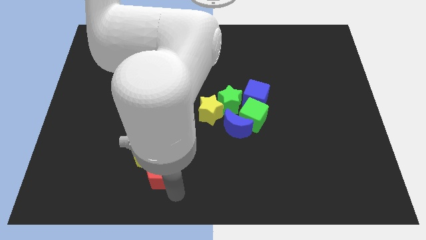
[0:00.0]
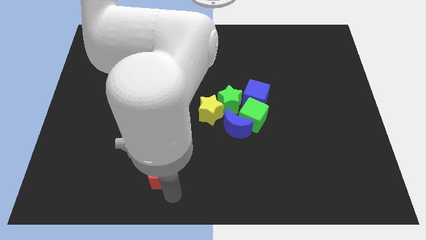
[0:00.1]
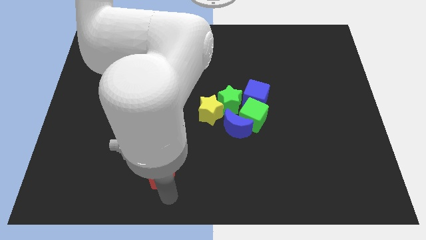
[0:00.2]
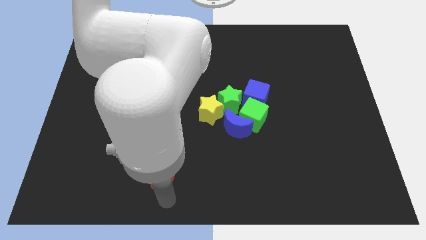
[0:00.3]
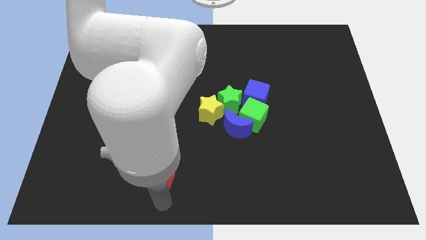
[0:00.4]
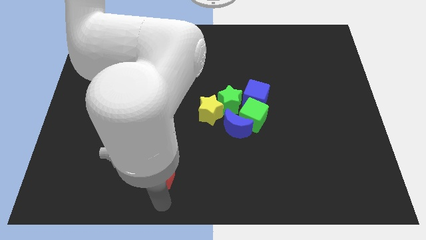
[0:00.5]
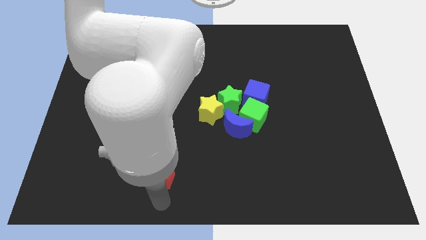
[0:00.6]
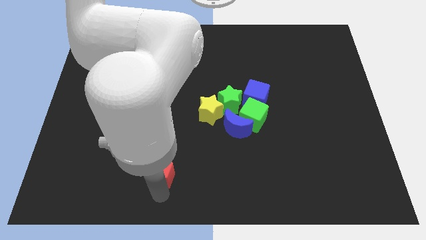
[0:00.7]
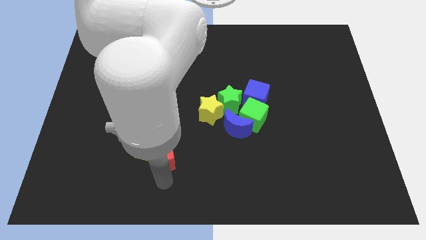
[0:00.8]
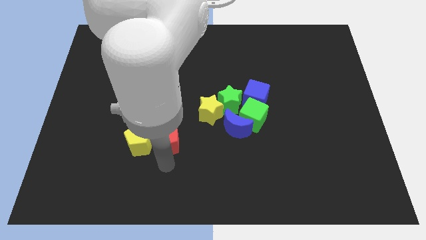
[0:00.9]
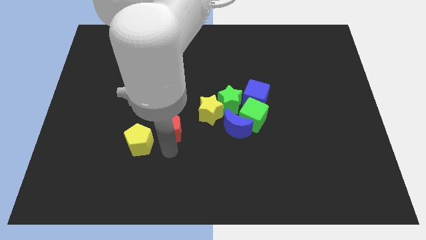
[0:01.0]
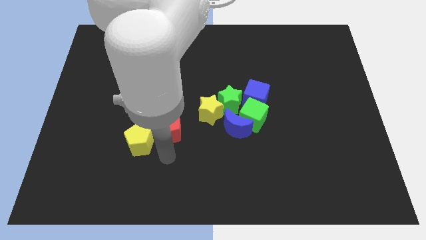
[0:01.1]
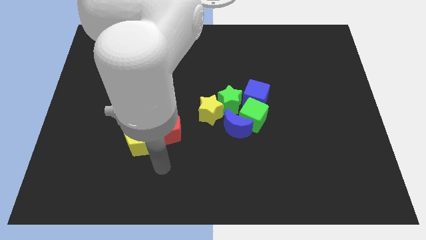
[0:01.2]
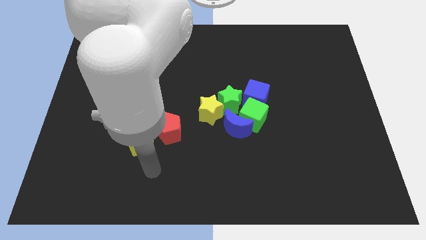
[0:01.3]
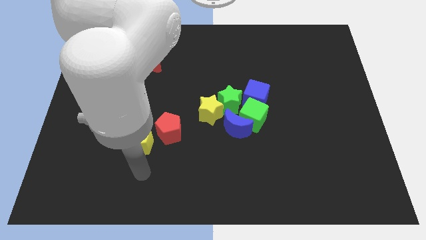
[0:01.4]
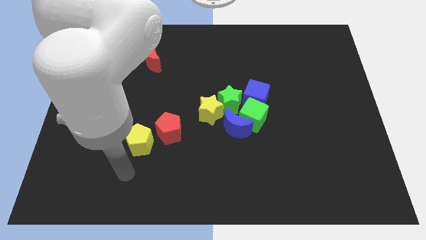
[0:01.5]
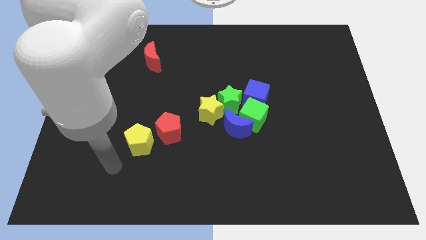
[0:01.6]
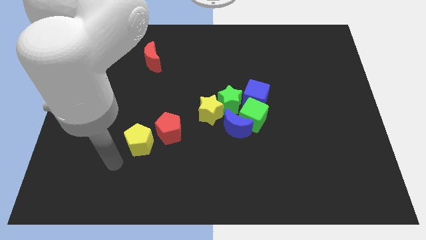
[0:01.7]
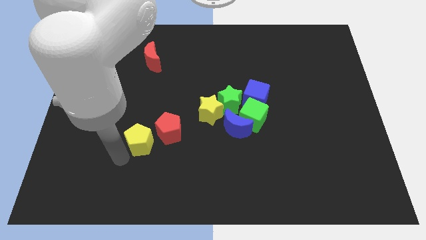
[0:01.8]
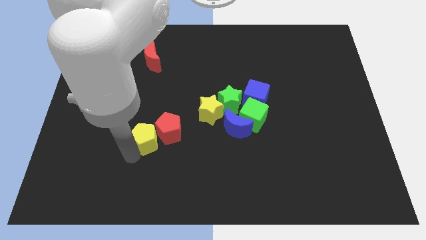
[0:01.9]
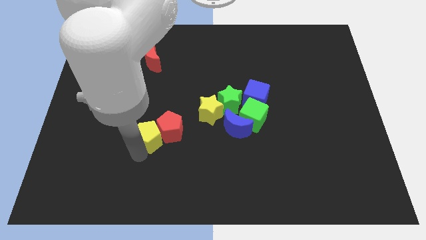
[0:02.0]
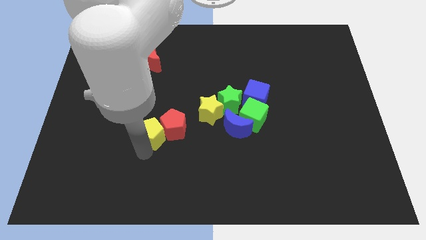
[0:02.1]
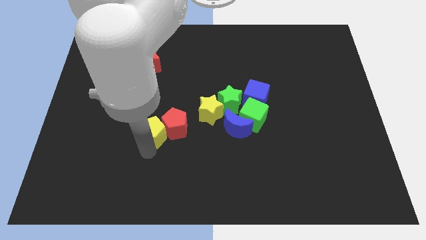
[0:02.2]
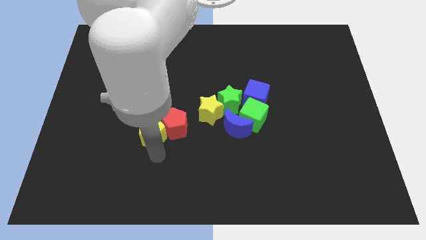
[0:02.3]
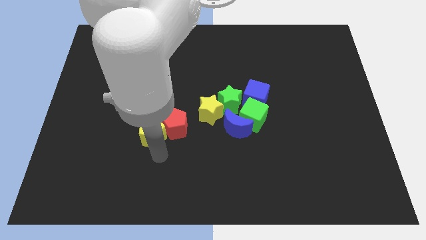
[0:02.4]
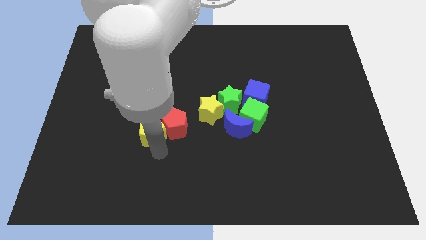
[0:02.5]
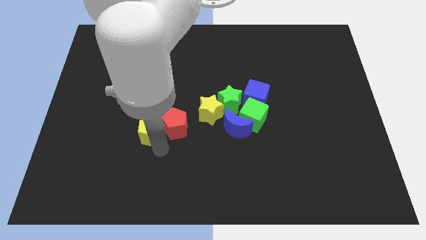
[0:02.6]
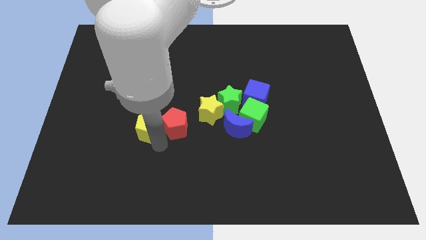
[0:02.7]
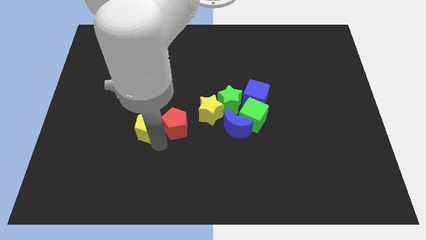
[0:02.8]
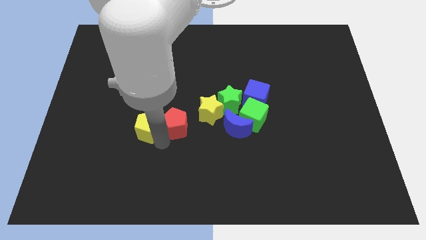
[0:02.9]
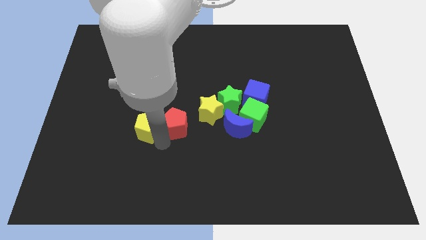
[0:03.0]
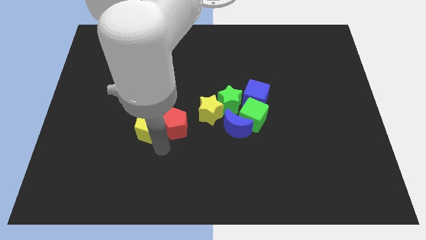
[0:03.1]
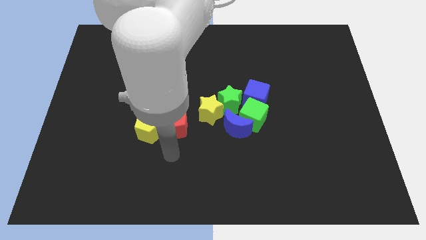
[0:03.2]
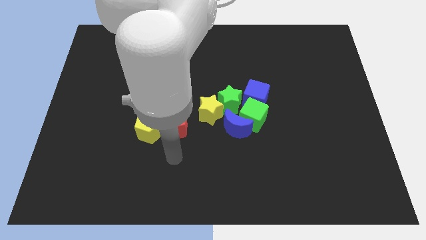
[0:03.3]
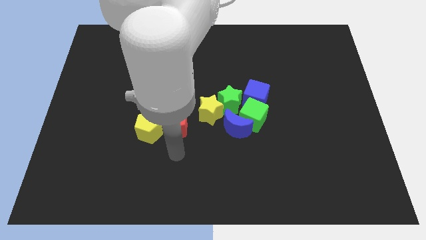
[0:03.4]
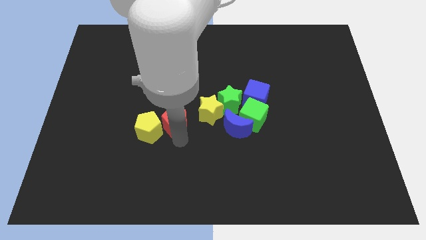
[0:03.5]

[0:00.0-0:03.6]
place the yellow pentagon left to the red pentagon

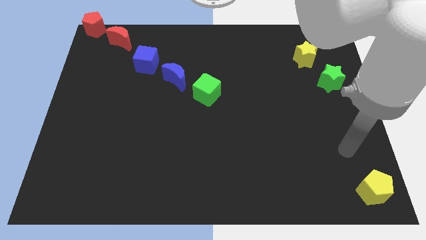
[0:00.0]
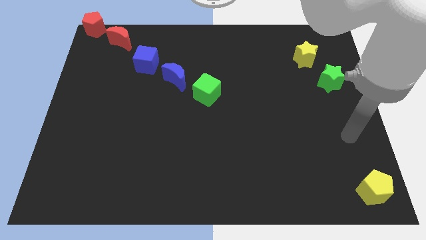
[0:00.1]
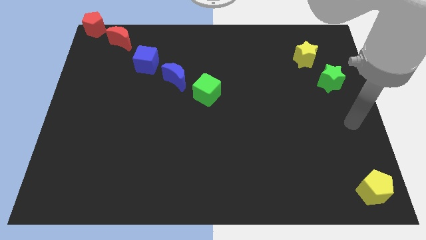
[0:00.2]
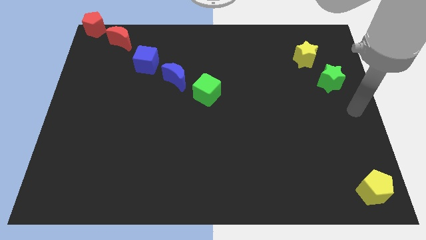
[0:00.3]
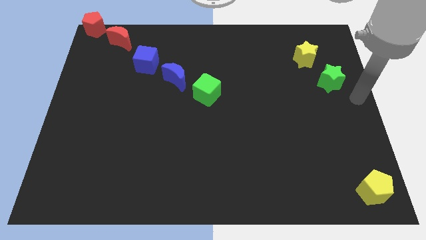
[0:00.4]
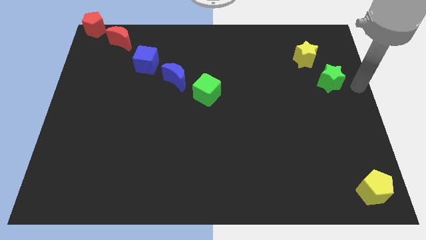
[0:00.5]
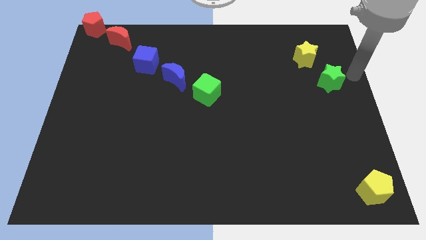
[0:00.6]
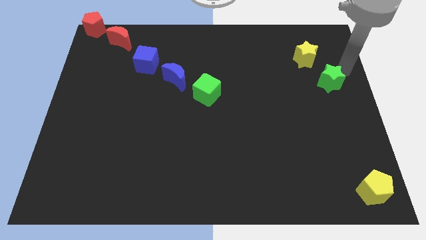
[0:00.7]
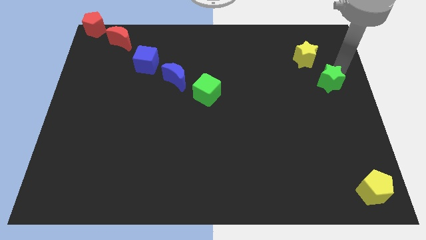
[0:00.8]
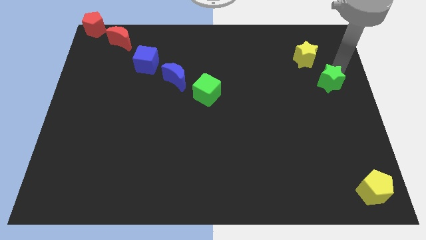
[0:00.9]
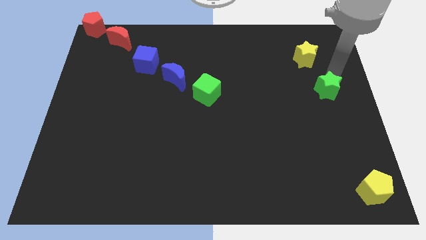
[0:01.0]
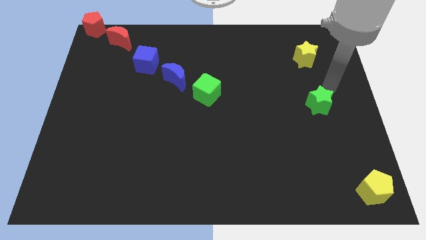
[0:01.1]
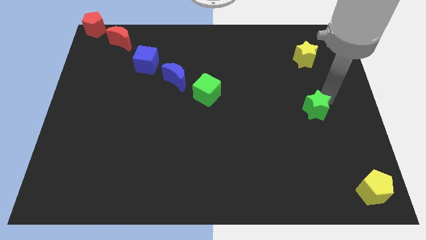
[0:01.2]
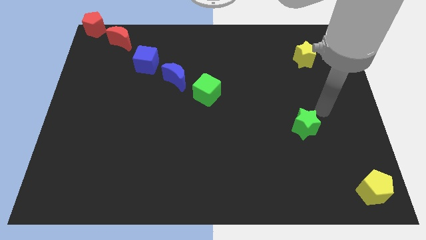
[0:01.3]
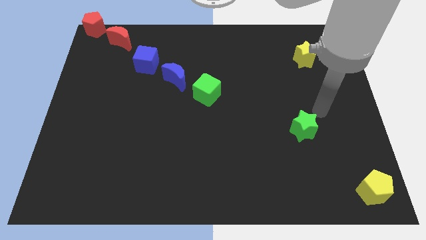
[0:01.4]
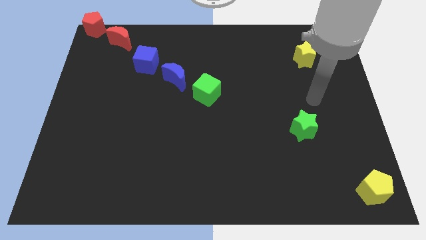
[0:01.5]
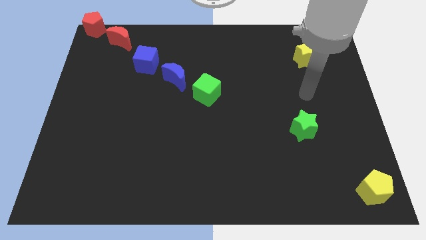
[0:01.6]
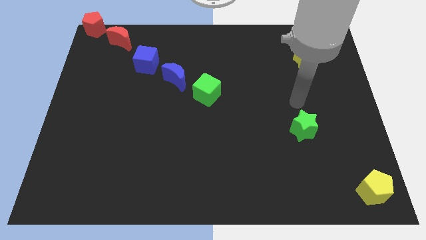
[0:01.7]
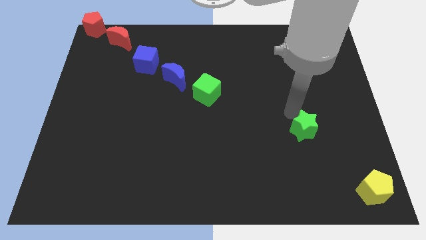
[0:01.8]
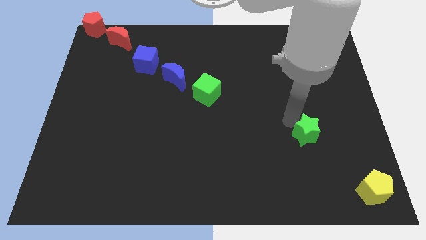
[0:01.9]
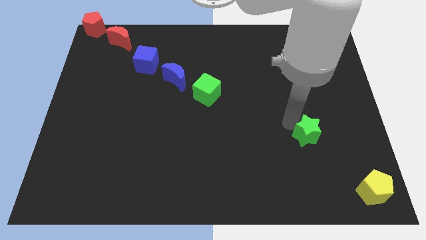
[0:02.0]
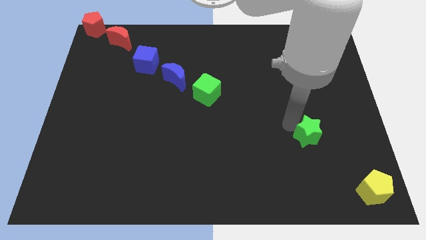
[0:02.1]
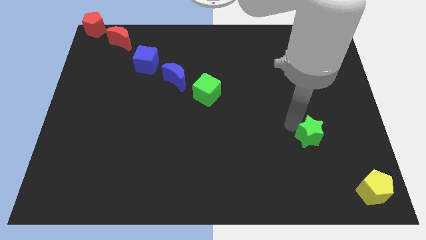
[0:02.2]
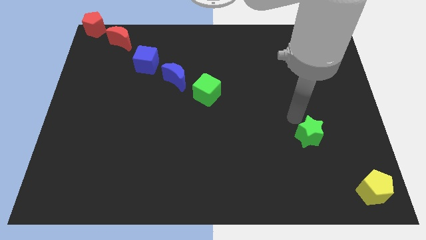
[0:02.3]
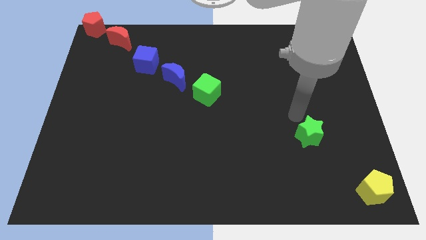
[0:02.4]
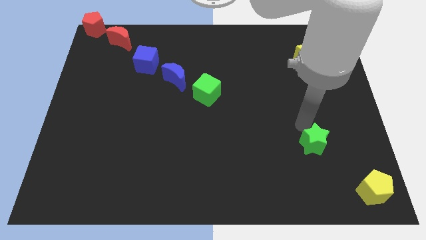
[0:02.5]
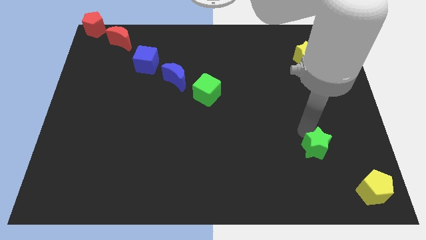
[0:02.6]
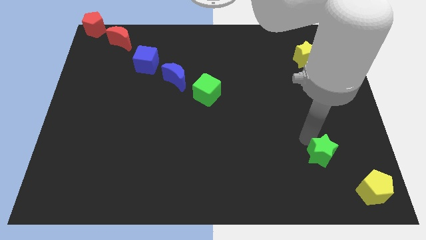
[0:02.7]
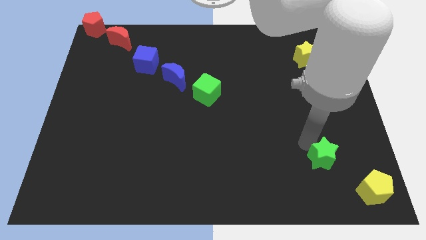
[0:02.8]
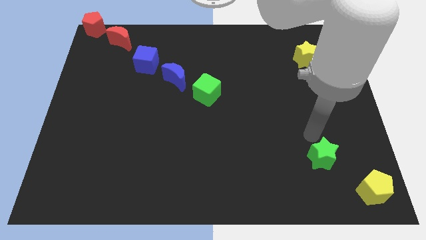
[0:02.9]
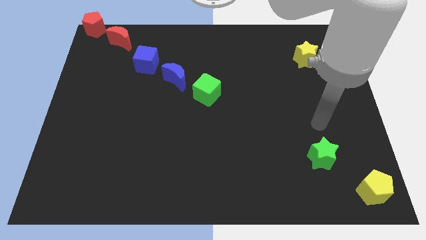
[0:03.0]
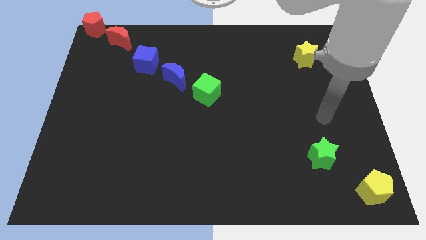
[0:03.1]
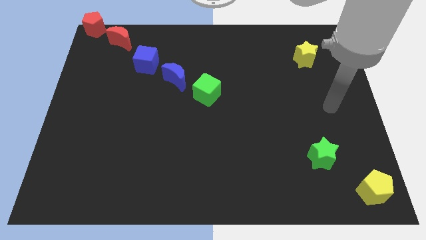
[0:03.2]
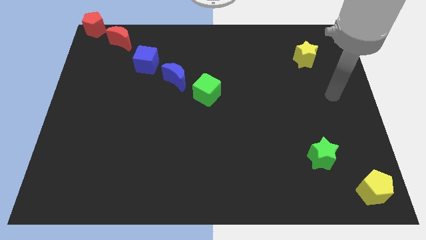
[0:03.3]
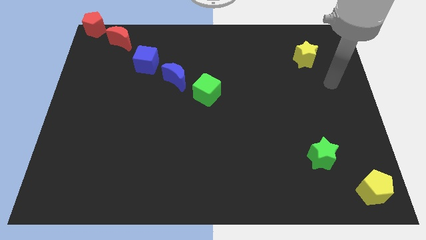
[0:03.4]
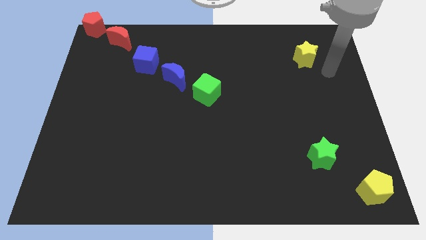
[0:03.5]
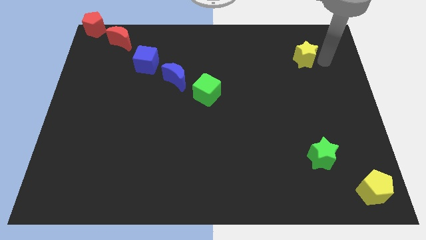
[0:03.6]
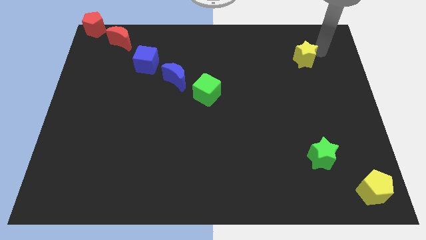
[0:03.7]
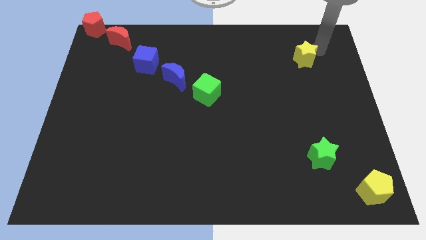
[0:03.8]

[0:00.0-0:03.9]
push the green star downwards

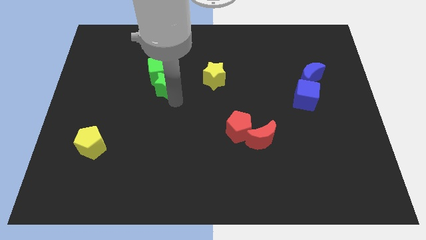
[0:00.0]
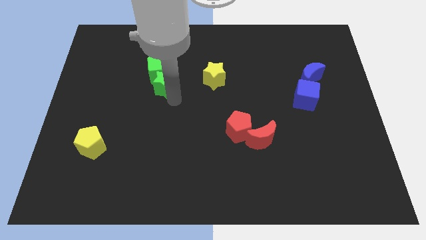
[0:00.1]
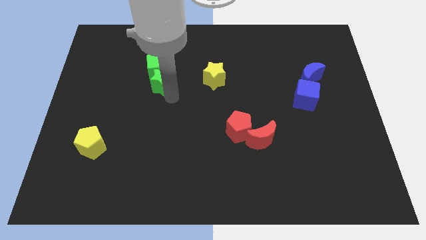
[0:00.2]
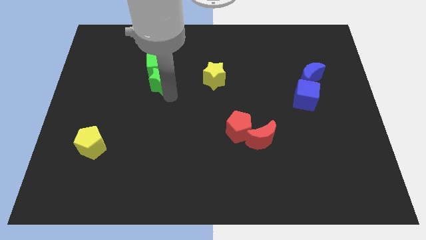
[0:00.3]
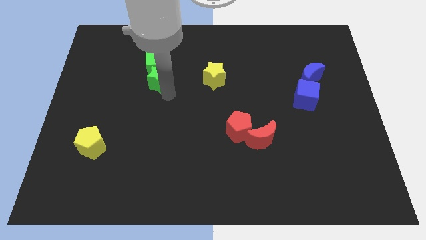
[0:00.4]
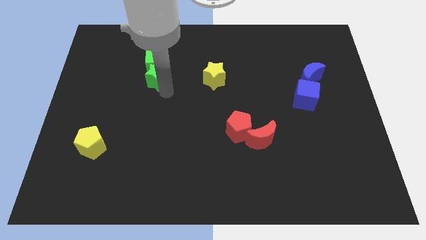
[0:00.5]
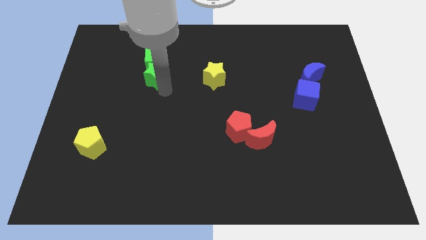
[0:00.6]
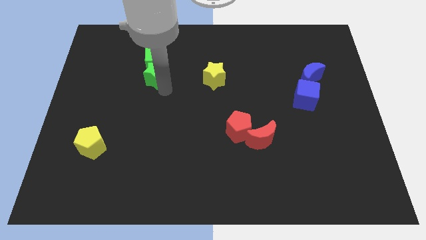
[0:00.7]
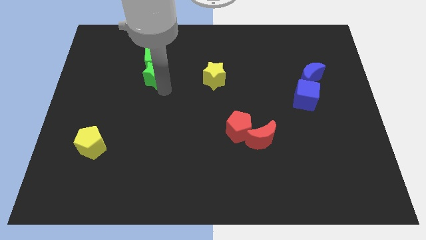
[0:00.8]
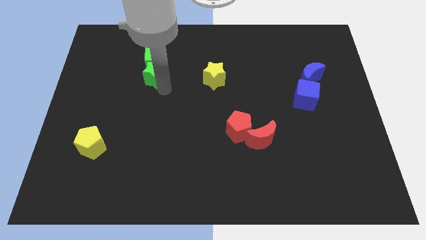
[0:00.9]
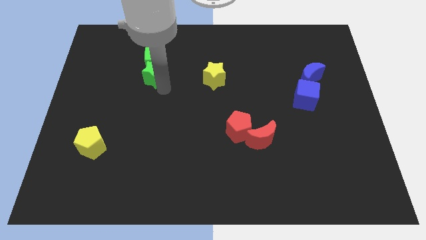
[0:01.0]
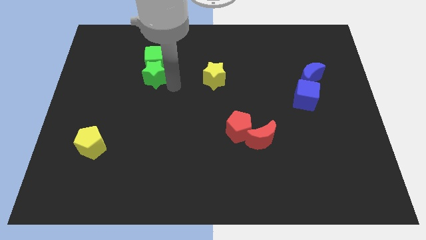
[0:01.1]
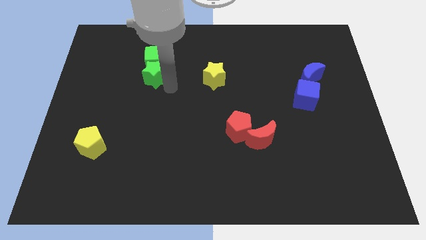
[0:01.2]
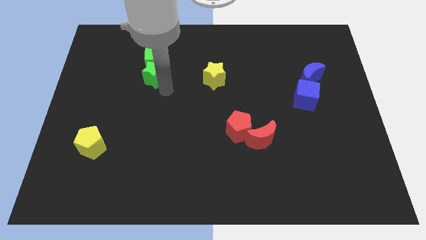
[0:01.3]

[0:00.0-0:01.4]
push the green cube with the green star to the top left of the board
